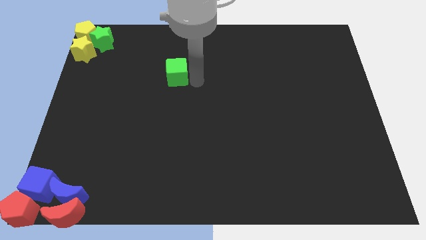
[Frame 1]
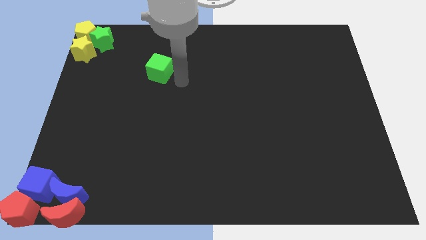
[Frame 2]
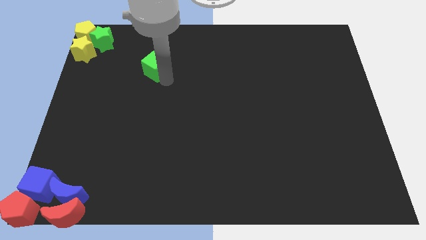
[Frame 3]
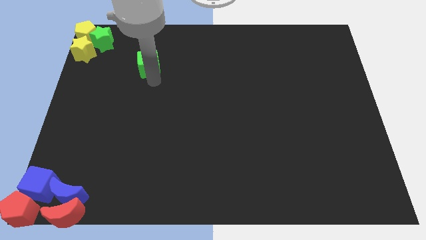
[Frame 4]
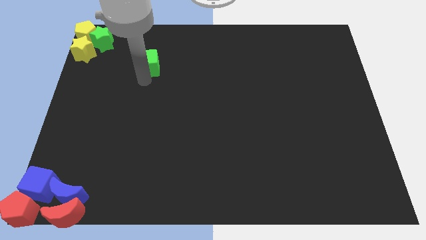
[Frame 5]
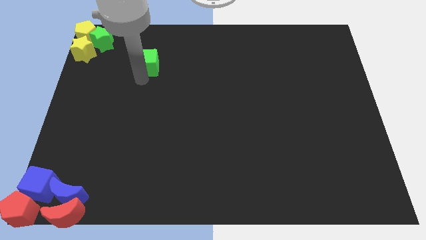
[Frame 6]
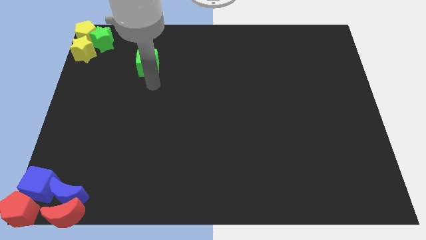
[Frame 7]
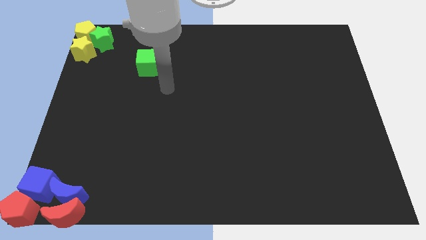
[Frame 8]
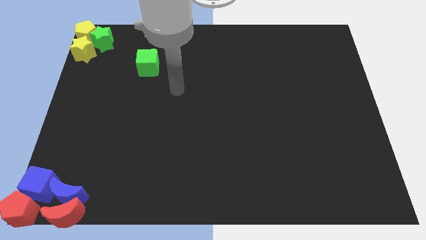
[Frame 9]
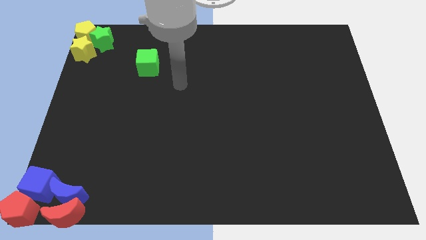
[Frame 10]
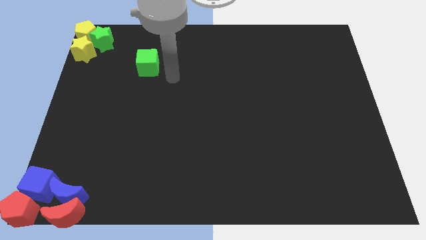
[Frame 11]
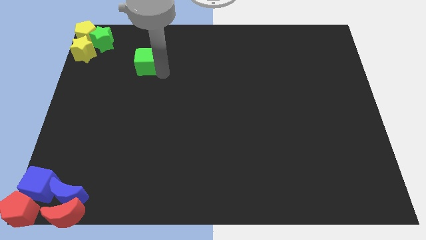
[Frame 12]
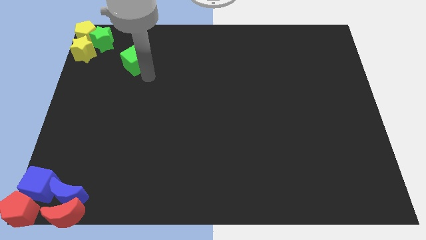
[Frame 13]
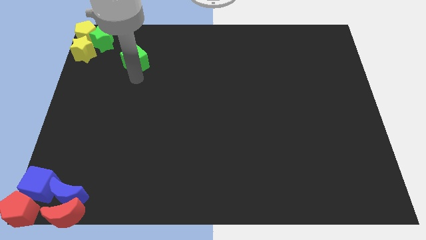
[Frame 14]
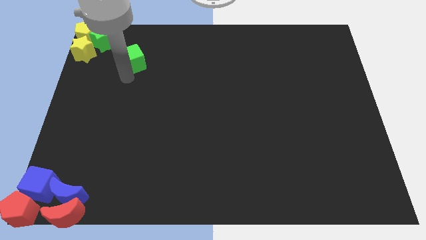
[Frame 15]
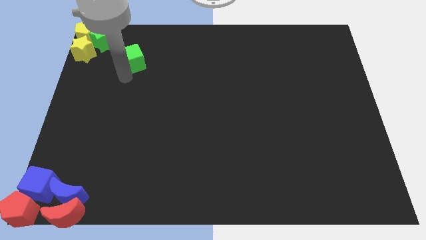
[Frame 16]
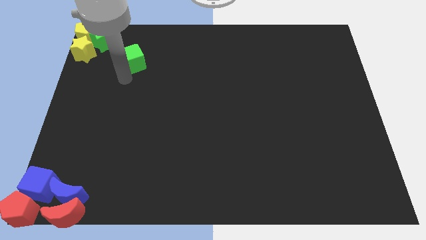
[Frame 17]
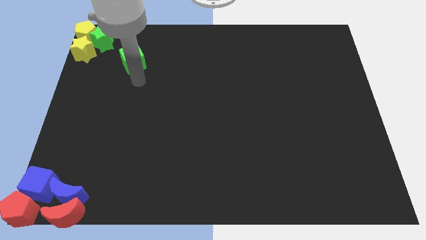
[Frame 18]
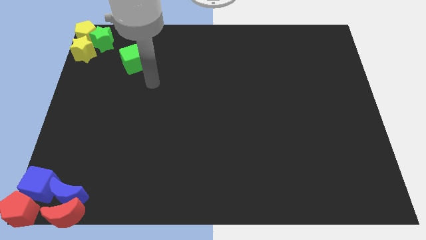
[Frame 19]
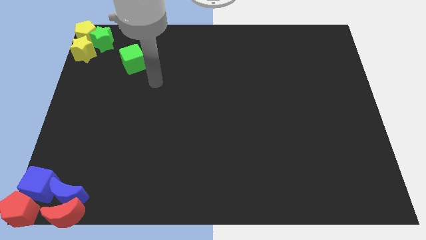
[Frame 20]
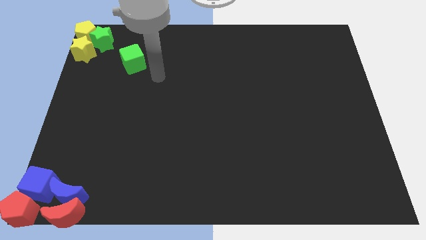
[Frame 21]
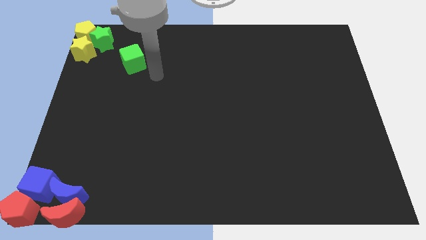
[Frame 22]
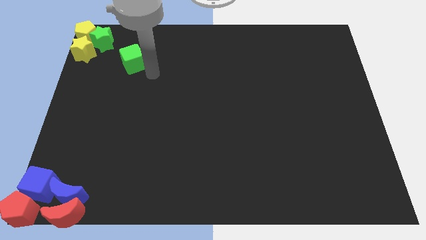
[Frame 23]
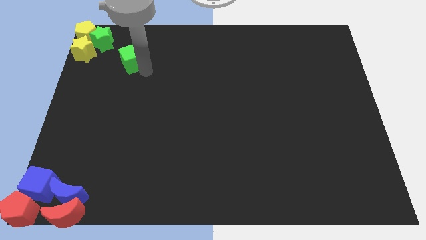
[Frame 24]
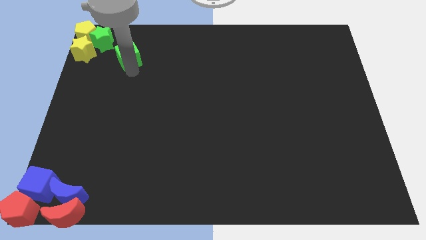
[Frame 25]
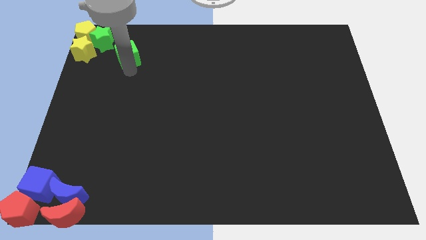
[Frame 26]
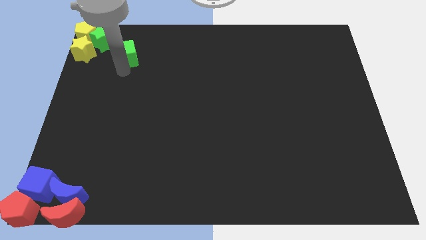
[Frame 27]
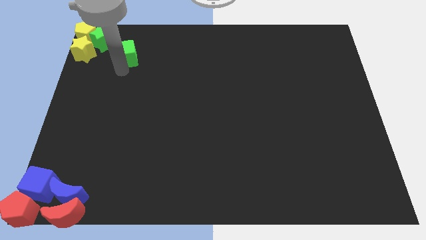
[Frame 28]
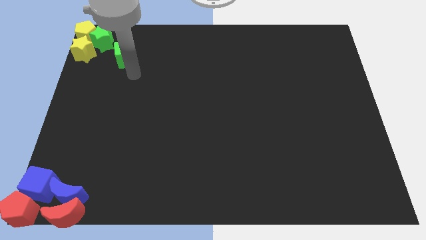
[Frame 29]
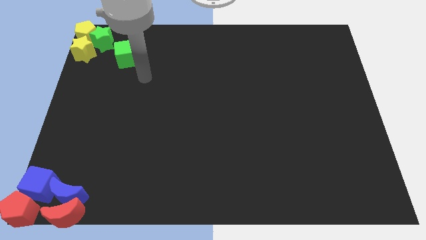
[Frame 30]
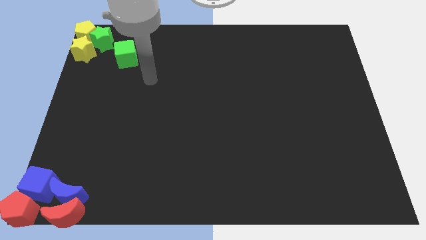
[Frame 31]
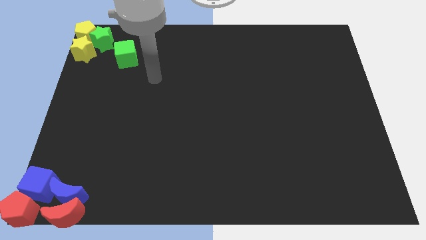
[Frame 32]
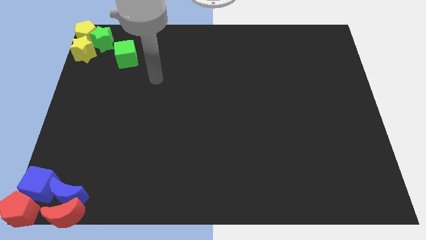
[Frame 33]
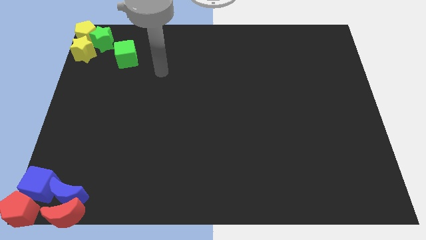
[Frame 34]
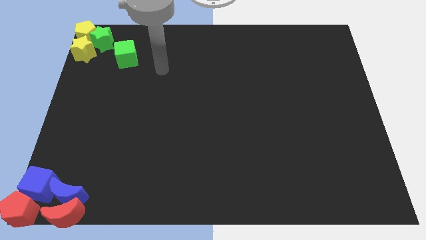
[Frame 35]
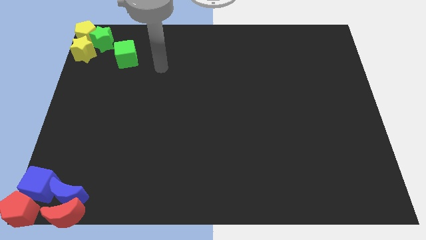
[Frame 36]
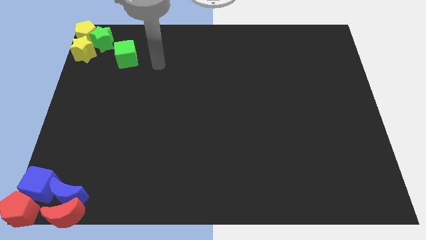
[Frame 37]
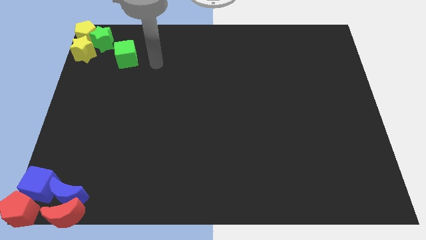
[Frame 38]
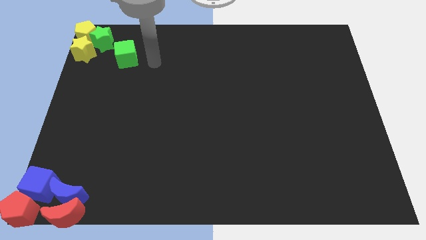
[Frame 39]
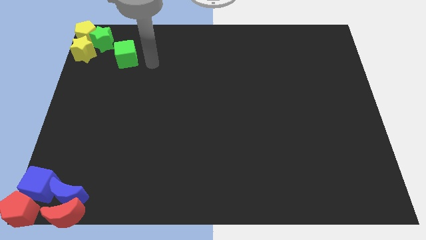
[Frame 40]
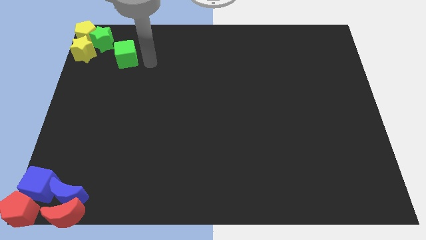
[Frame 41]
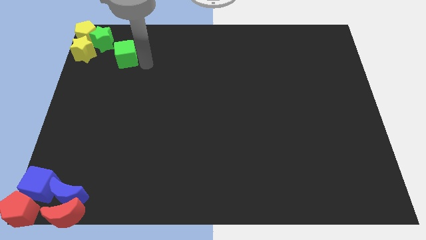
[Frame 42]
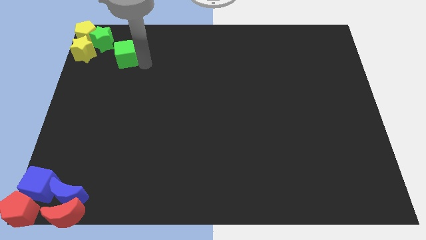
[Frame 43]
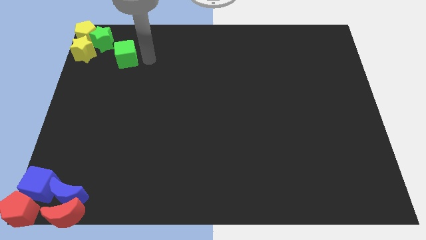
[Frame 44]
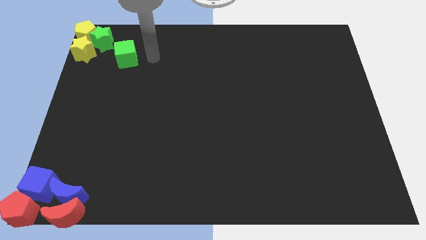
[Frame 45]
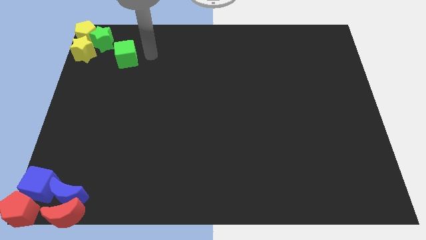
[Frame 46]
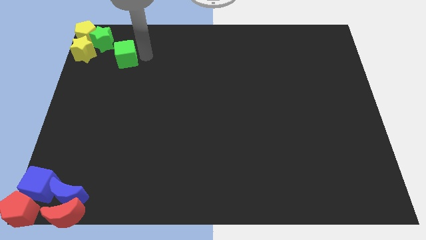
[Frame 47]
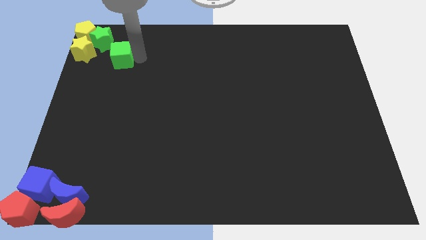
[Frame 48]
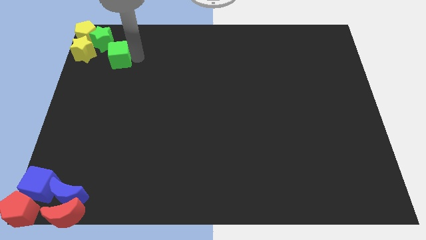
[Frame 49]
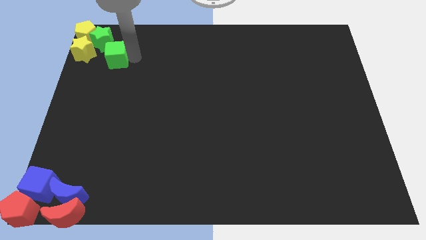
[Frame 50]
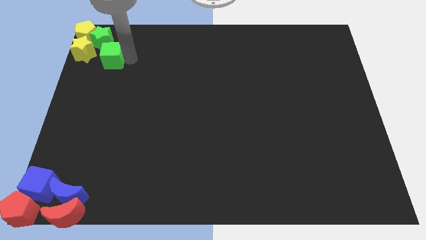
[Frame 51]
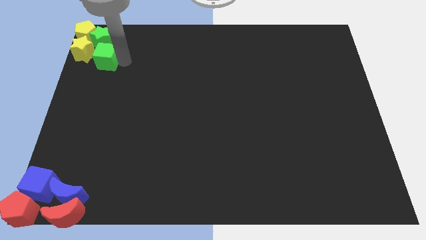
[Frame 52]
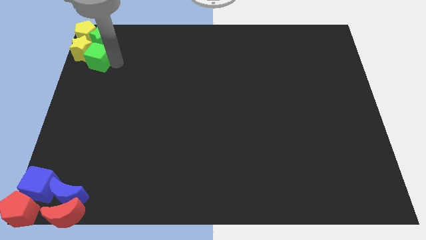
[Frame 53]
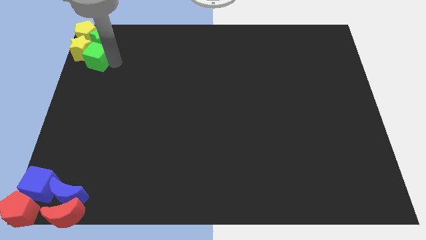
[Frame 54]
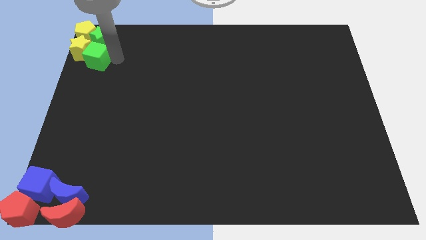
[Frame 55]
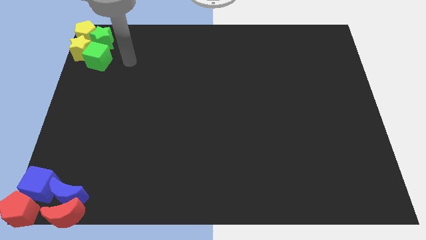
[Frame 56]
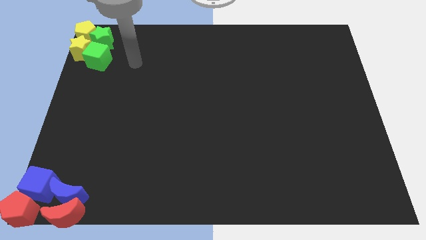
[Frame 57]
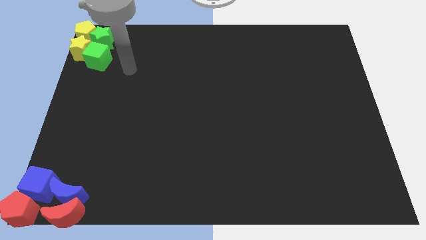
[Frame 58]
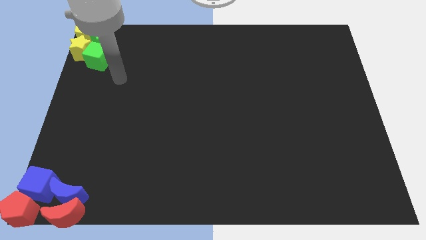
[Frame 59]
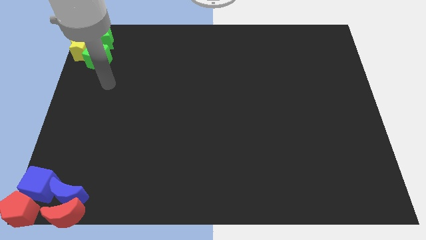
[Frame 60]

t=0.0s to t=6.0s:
push the green cube into the yellow star

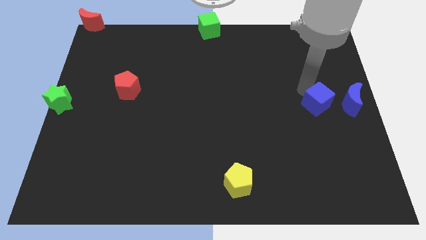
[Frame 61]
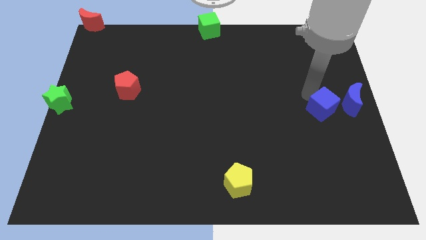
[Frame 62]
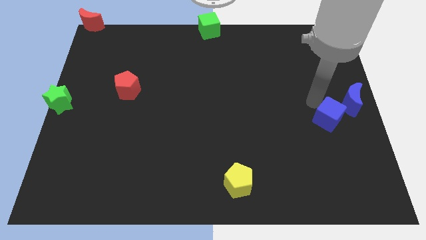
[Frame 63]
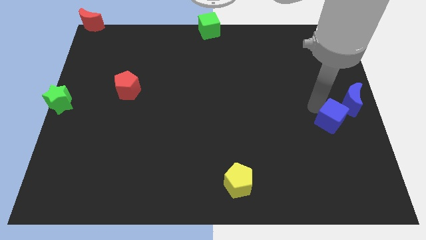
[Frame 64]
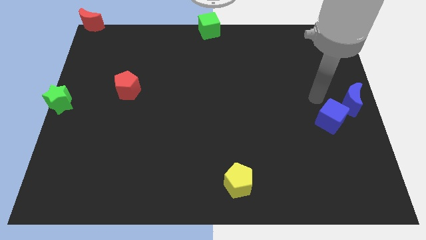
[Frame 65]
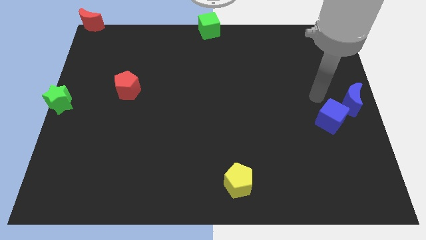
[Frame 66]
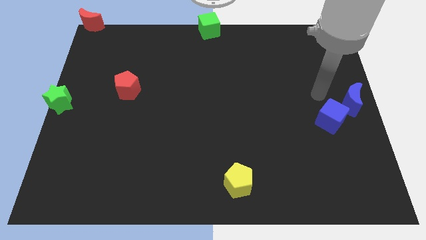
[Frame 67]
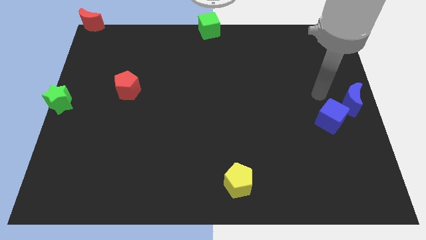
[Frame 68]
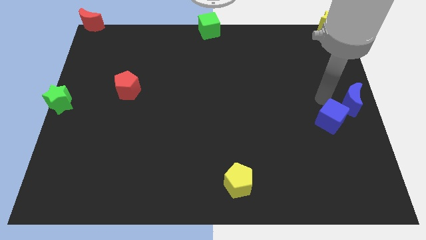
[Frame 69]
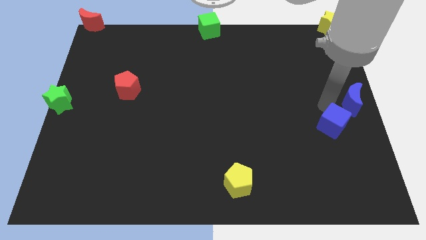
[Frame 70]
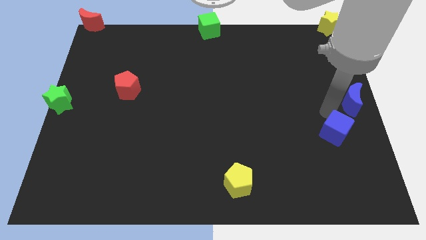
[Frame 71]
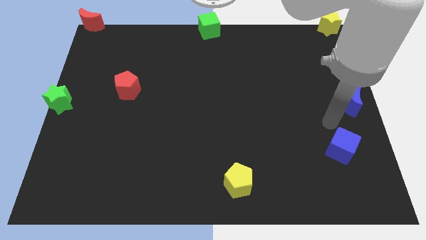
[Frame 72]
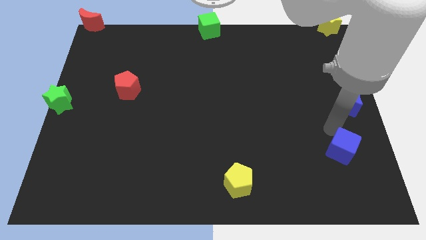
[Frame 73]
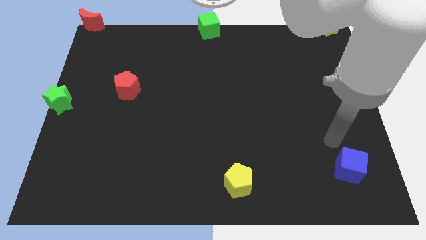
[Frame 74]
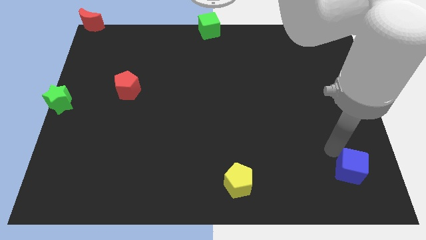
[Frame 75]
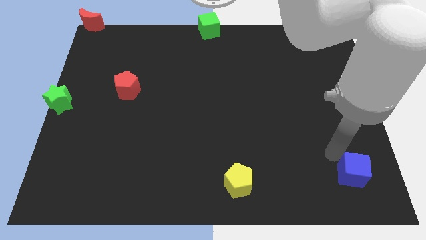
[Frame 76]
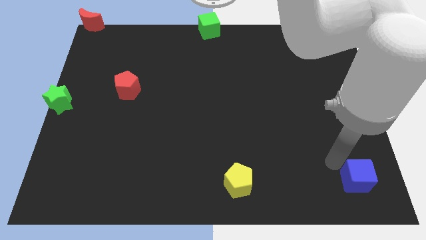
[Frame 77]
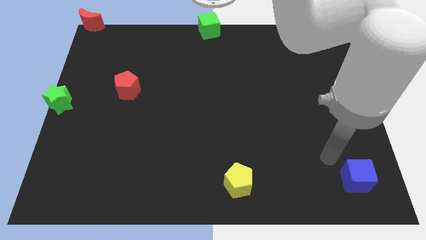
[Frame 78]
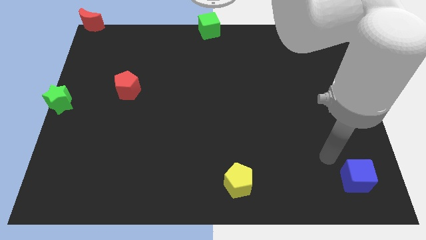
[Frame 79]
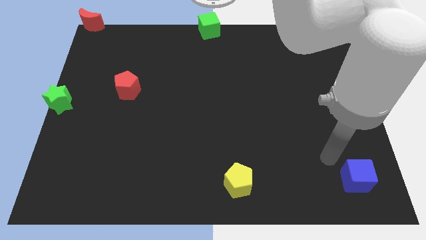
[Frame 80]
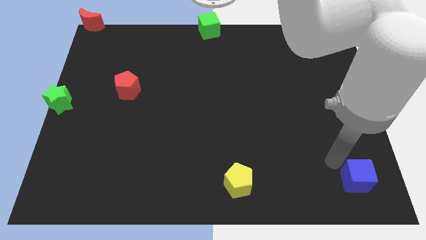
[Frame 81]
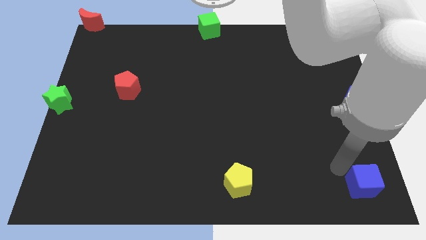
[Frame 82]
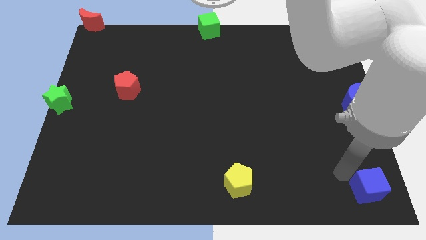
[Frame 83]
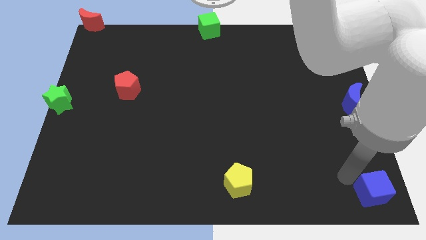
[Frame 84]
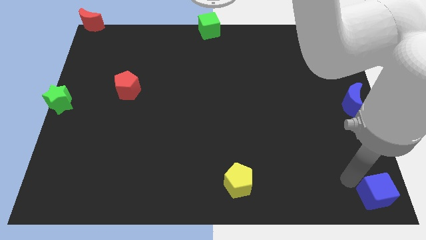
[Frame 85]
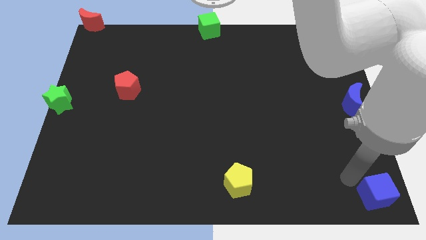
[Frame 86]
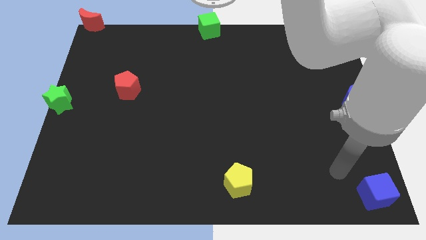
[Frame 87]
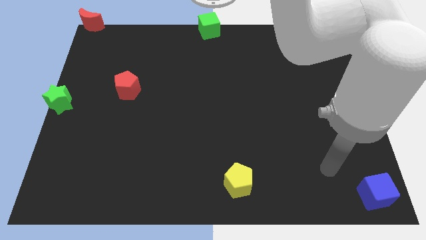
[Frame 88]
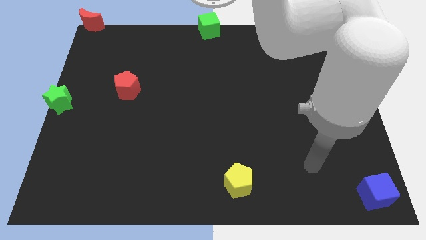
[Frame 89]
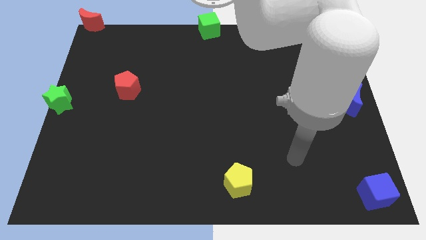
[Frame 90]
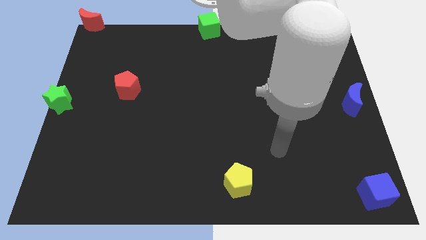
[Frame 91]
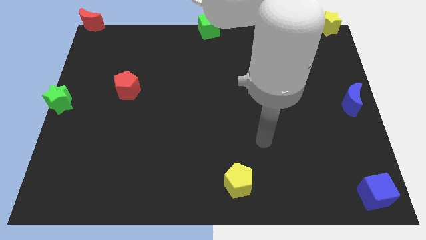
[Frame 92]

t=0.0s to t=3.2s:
move the blue cube to the right bottom corner of the board
